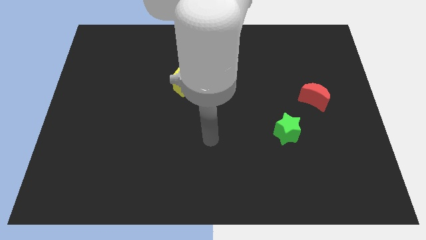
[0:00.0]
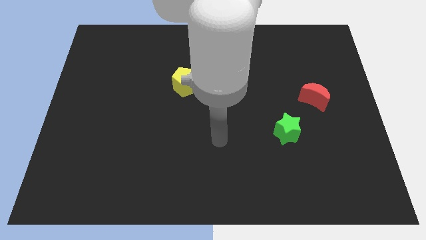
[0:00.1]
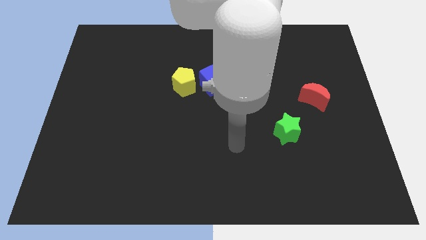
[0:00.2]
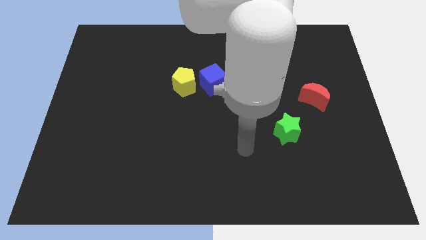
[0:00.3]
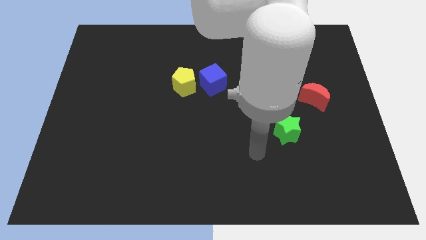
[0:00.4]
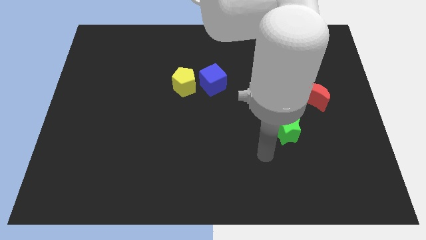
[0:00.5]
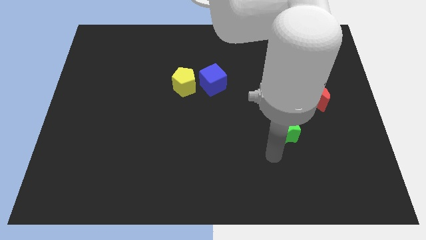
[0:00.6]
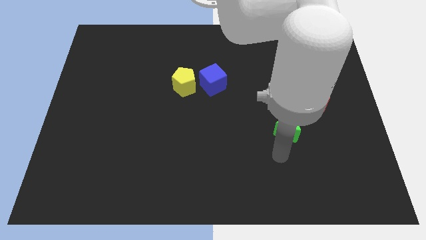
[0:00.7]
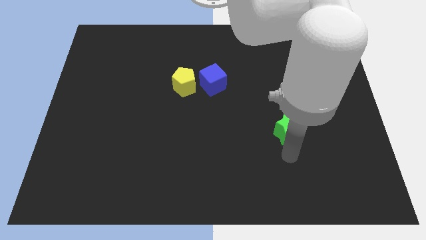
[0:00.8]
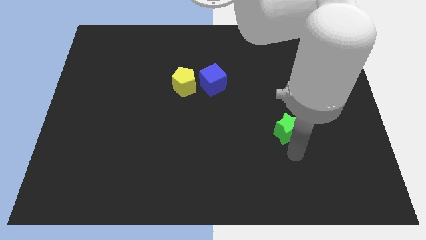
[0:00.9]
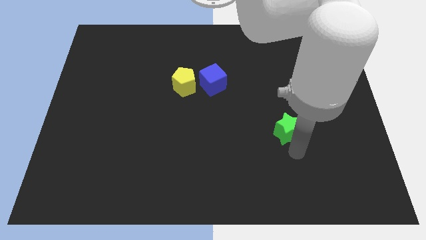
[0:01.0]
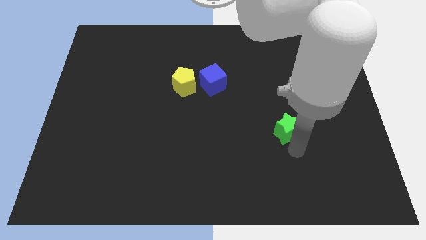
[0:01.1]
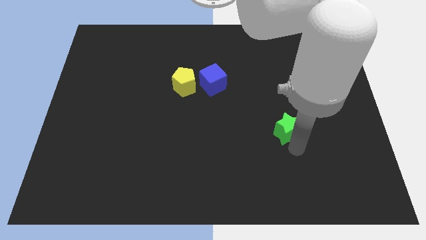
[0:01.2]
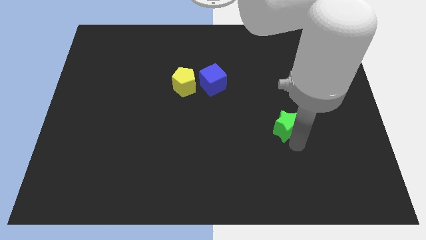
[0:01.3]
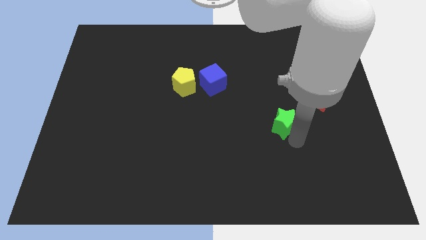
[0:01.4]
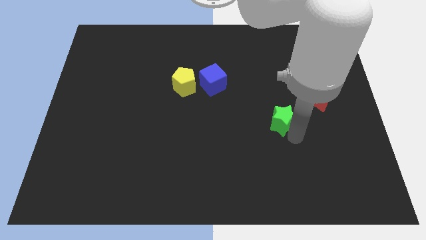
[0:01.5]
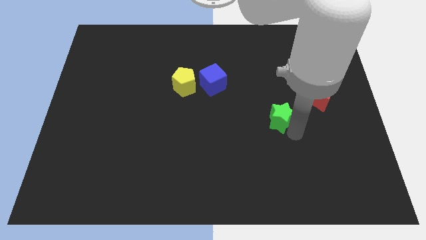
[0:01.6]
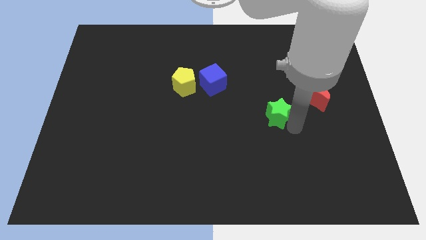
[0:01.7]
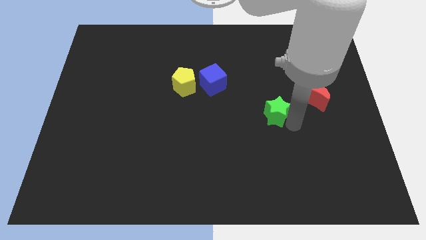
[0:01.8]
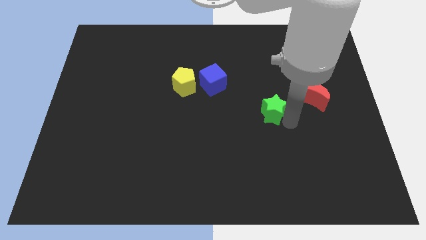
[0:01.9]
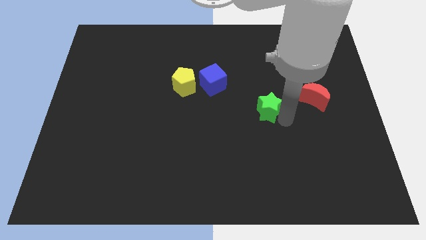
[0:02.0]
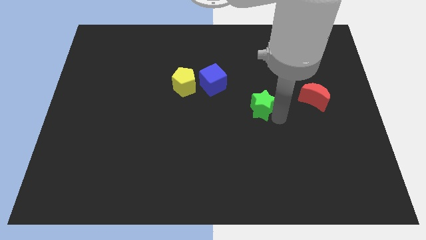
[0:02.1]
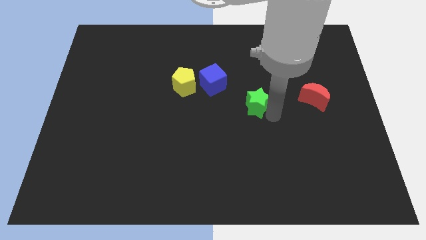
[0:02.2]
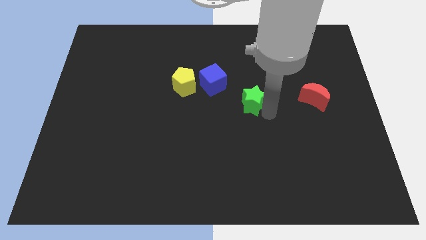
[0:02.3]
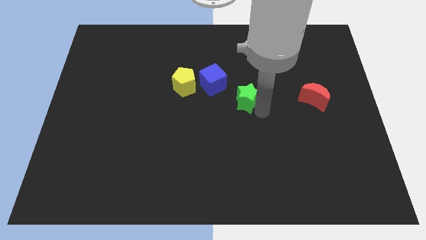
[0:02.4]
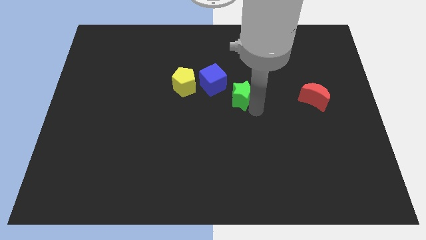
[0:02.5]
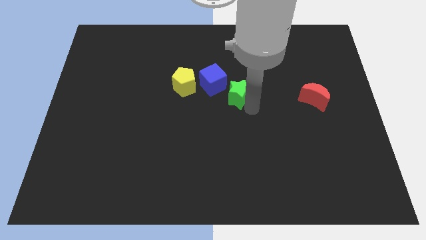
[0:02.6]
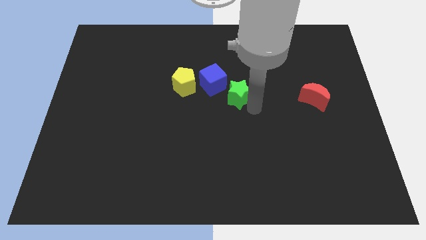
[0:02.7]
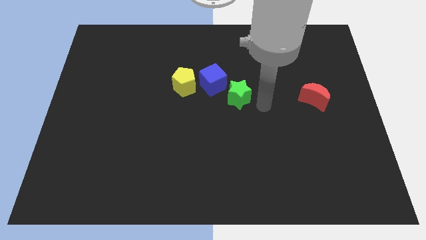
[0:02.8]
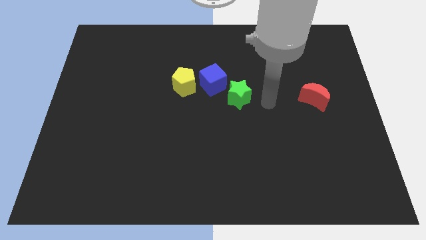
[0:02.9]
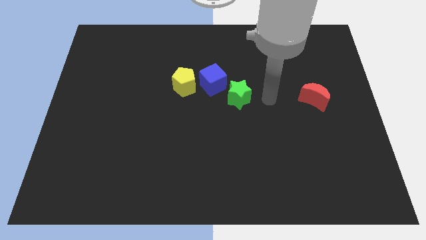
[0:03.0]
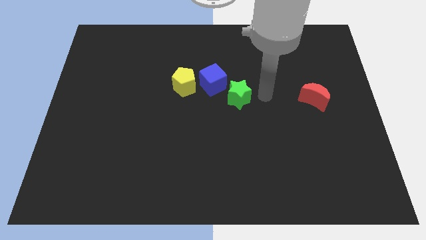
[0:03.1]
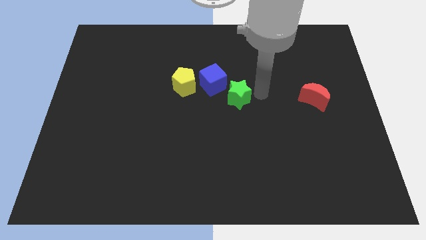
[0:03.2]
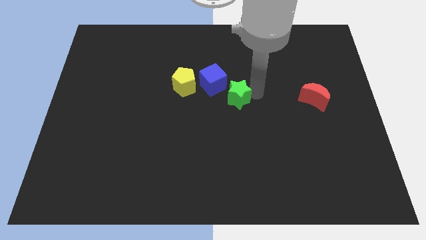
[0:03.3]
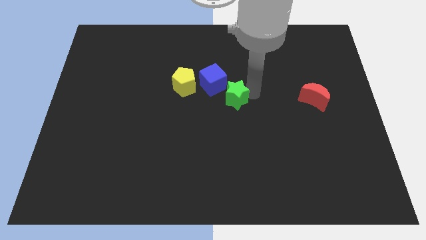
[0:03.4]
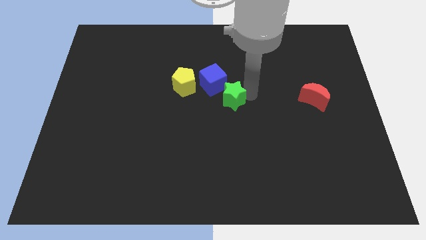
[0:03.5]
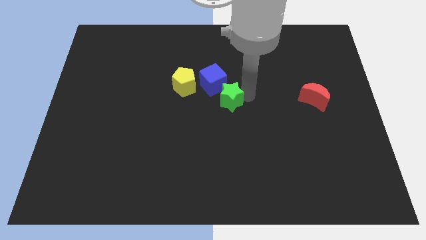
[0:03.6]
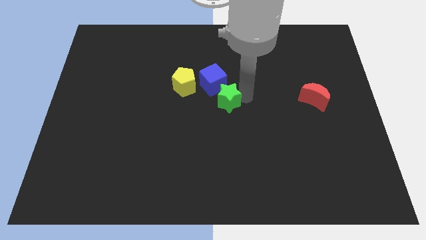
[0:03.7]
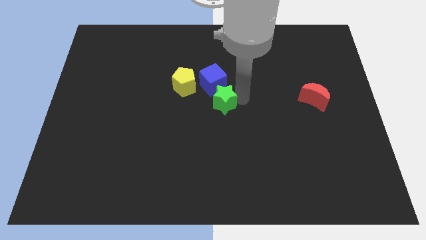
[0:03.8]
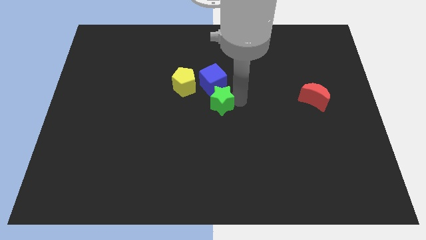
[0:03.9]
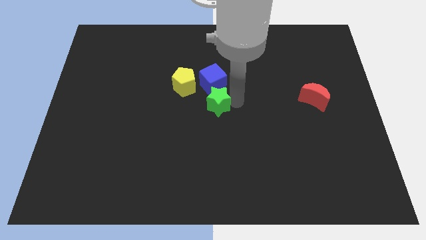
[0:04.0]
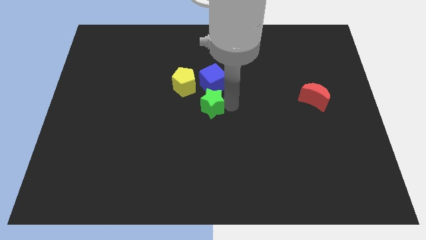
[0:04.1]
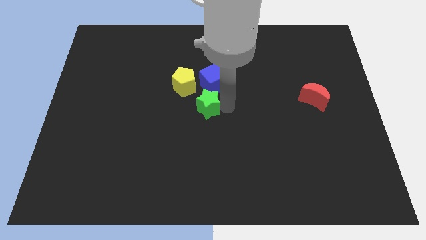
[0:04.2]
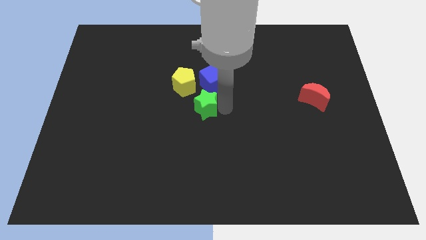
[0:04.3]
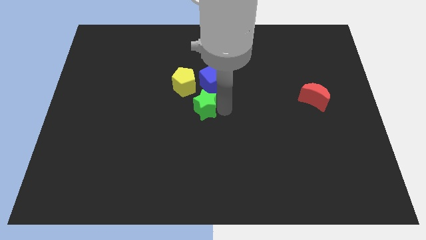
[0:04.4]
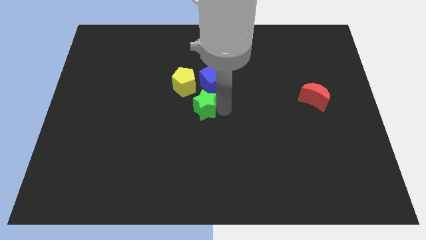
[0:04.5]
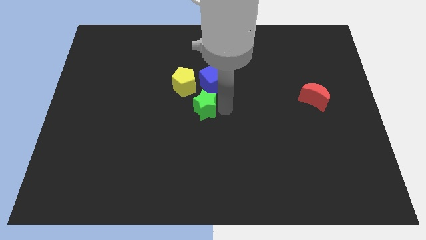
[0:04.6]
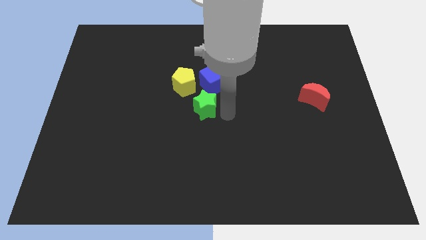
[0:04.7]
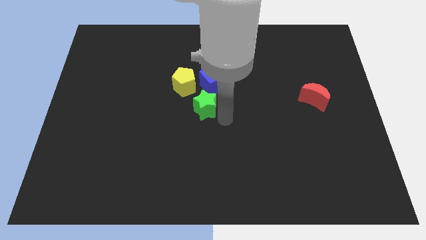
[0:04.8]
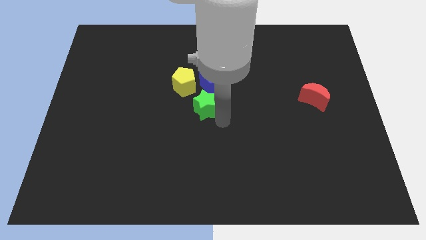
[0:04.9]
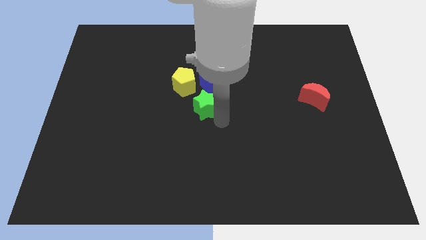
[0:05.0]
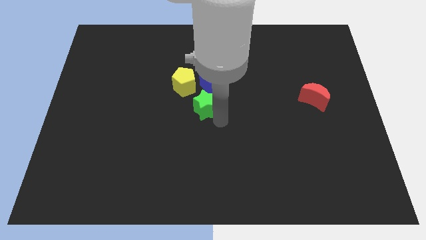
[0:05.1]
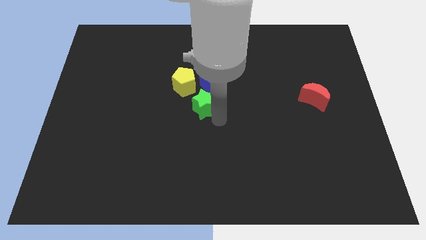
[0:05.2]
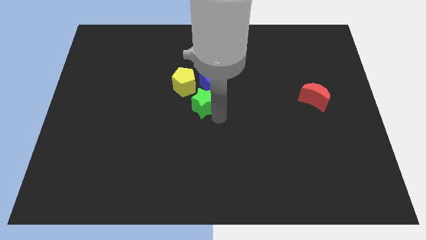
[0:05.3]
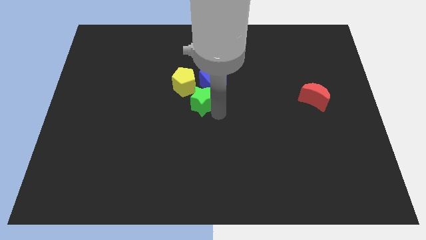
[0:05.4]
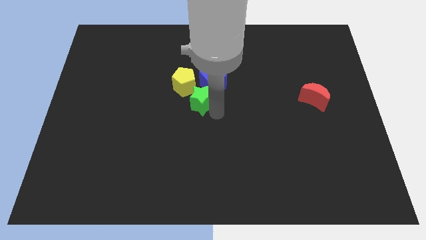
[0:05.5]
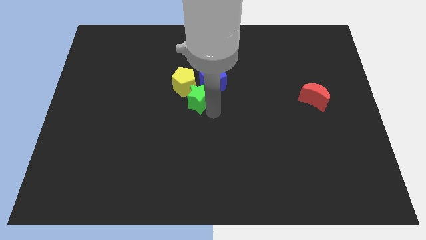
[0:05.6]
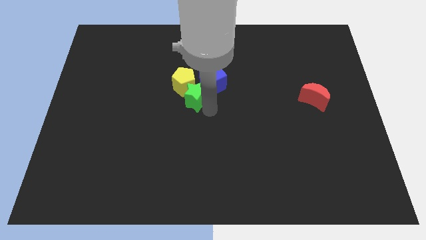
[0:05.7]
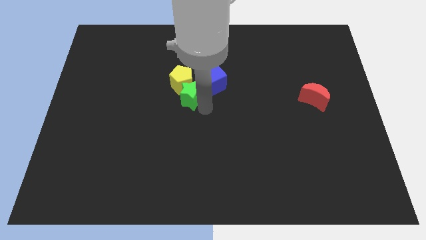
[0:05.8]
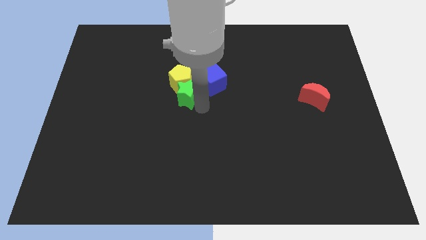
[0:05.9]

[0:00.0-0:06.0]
put the green star towards the yellow block

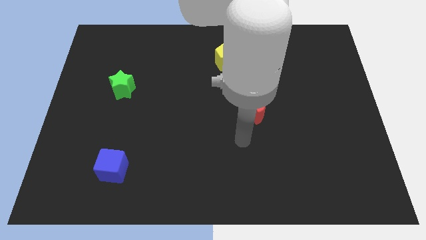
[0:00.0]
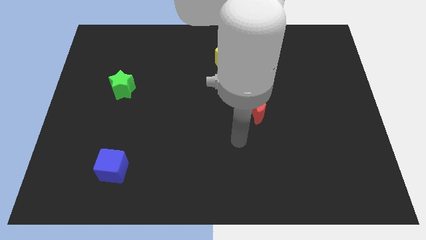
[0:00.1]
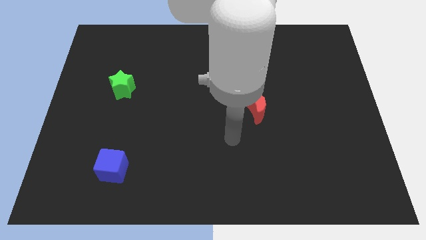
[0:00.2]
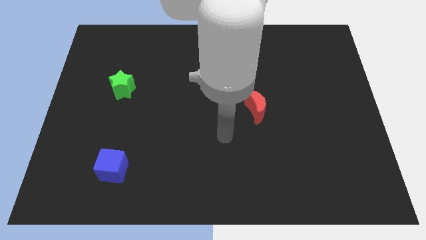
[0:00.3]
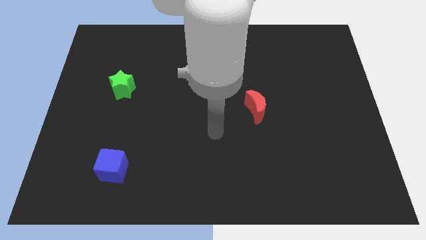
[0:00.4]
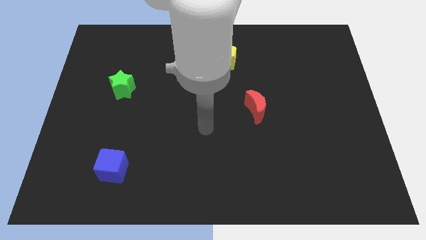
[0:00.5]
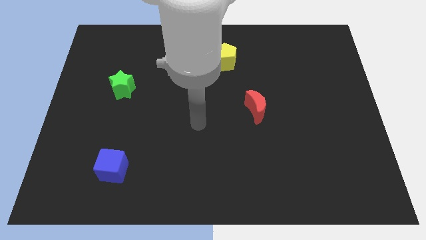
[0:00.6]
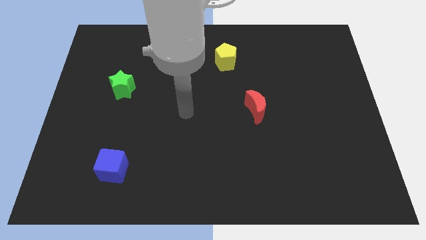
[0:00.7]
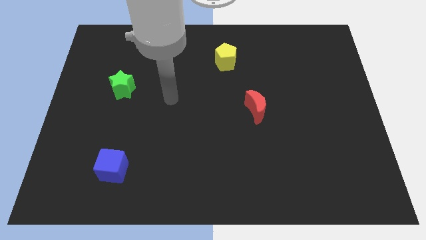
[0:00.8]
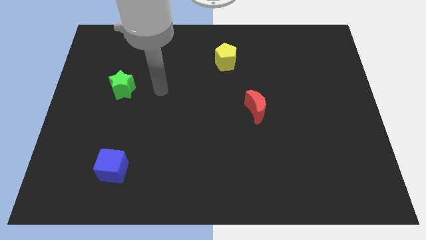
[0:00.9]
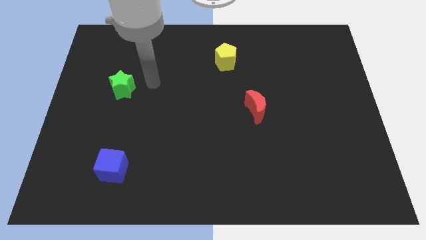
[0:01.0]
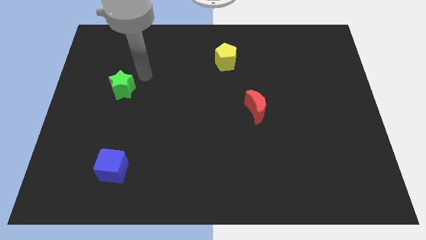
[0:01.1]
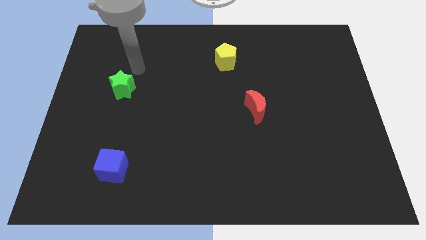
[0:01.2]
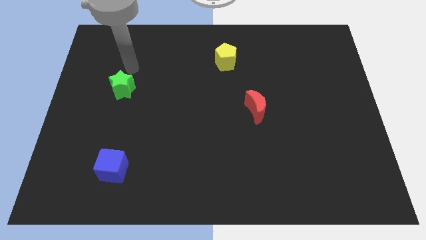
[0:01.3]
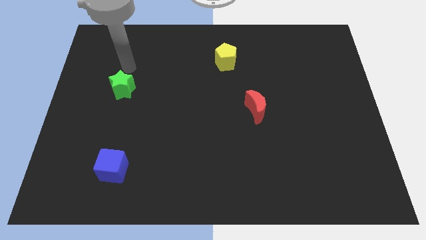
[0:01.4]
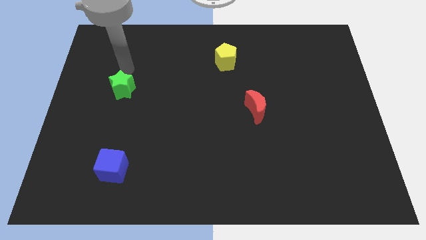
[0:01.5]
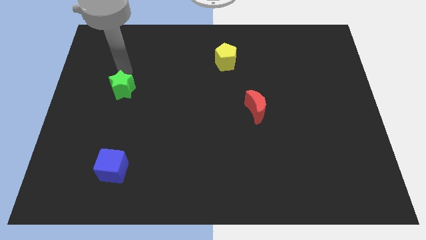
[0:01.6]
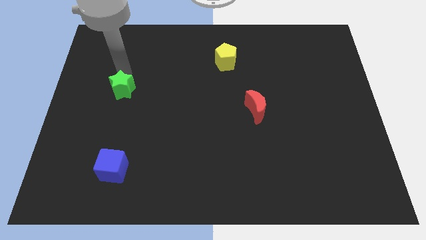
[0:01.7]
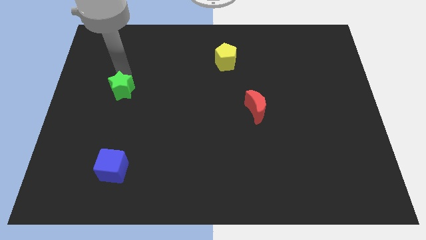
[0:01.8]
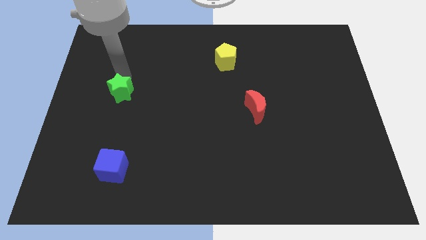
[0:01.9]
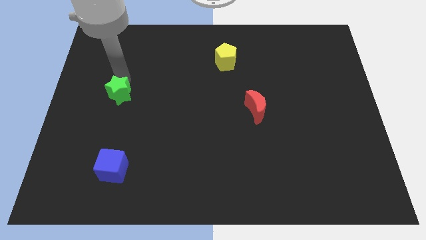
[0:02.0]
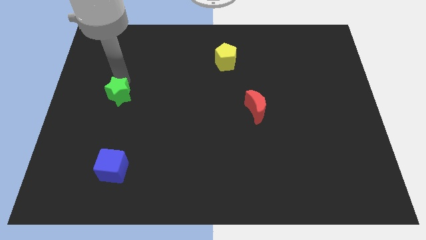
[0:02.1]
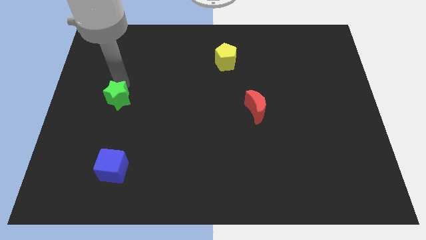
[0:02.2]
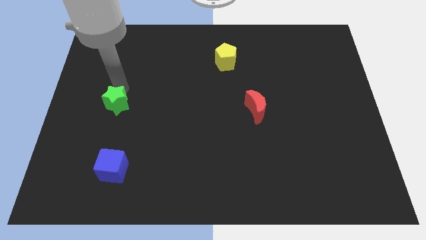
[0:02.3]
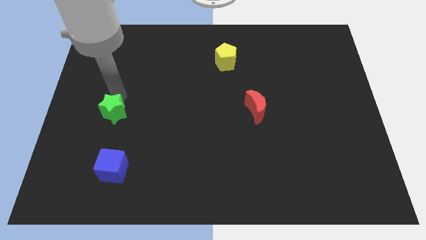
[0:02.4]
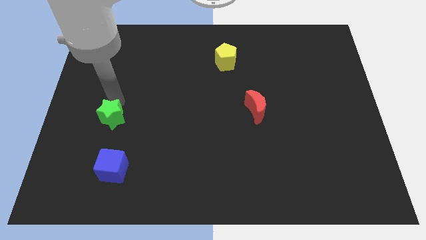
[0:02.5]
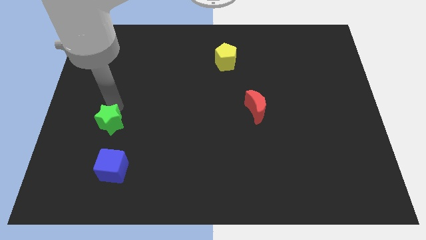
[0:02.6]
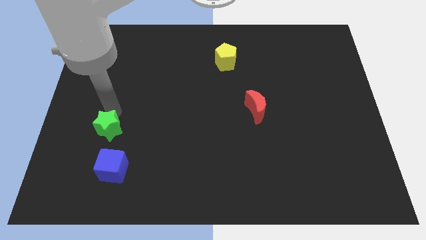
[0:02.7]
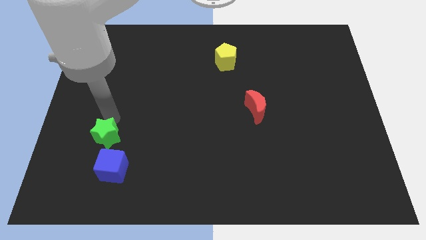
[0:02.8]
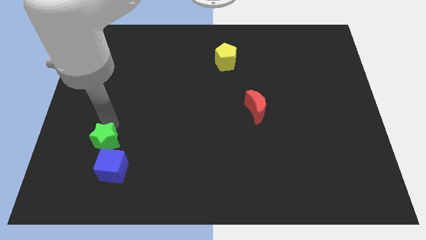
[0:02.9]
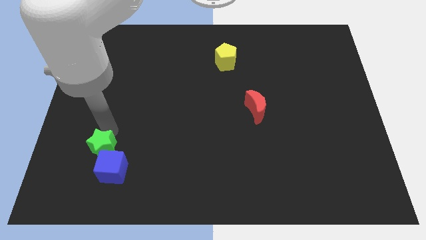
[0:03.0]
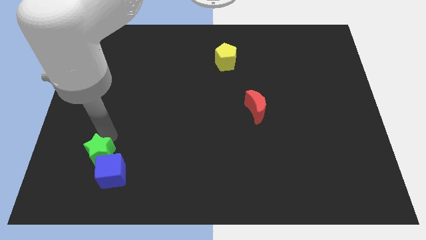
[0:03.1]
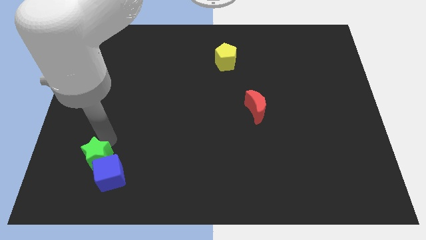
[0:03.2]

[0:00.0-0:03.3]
slide the star to the blue block
